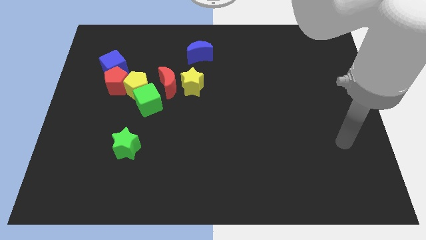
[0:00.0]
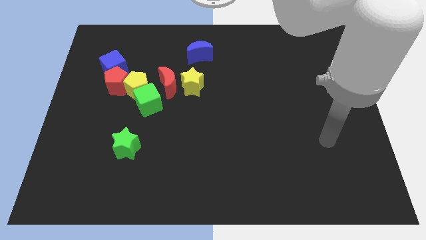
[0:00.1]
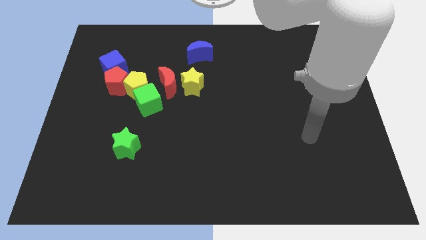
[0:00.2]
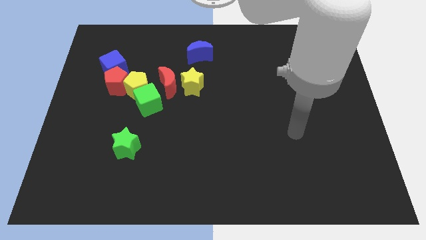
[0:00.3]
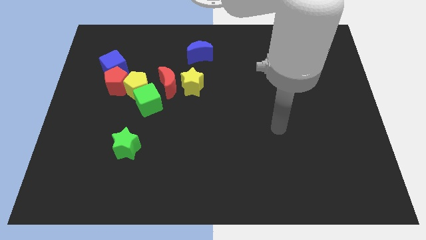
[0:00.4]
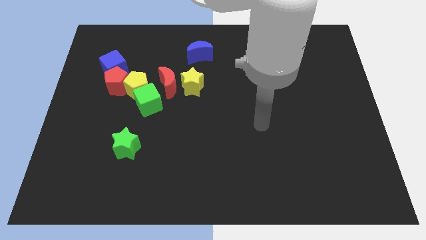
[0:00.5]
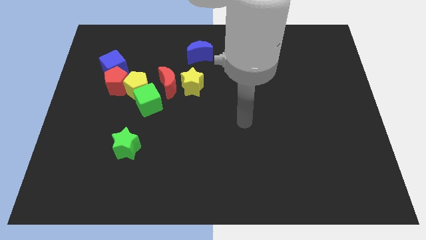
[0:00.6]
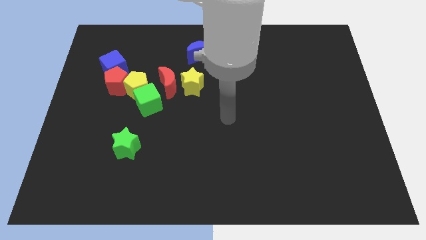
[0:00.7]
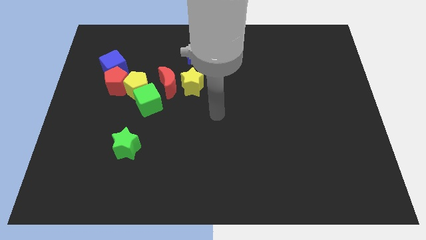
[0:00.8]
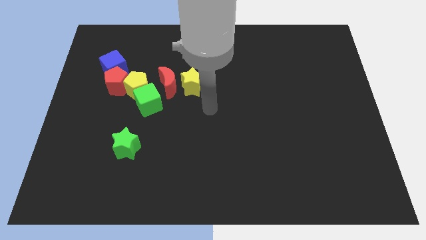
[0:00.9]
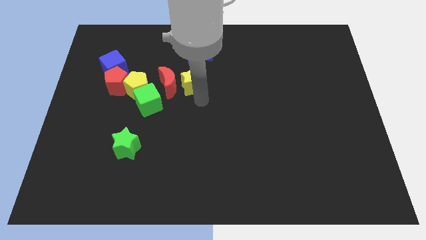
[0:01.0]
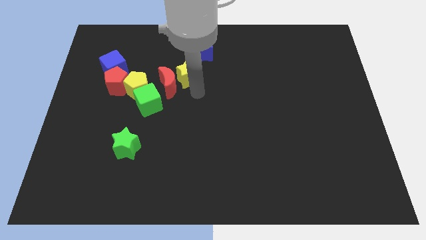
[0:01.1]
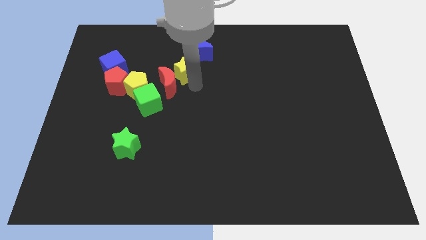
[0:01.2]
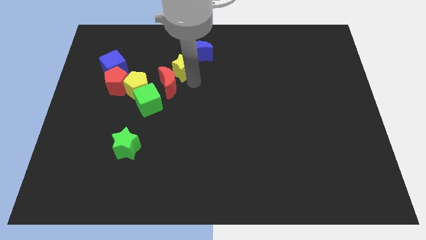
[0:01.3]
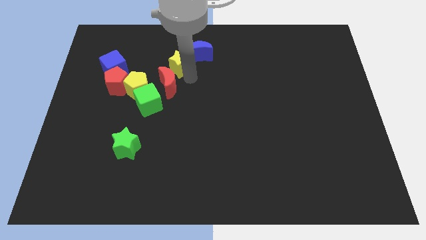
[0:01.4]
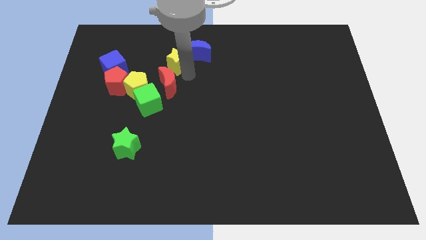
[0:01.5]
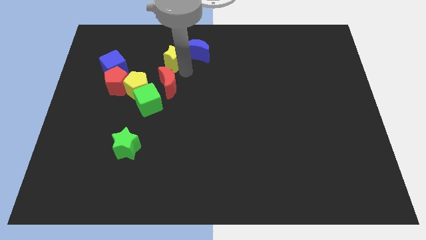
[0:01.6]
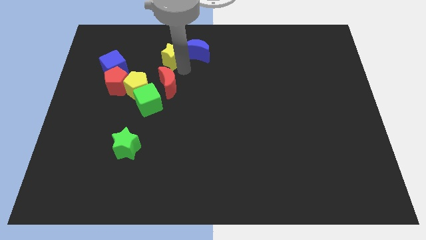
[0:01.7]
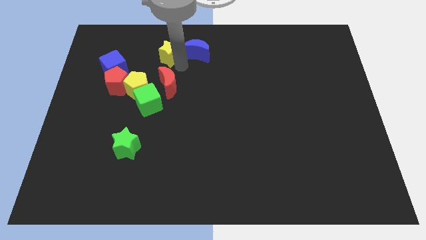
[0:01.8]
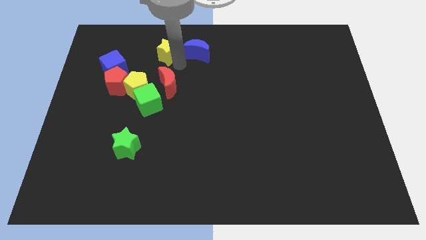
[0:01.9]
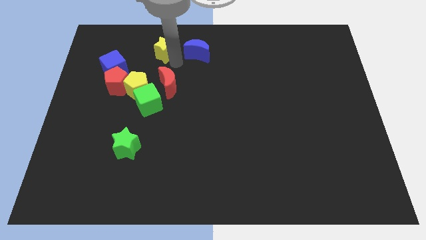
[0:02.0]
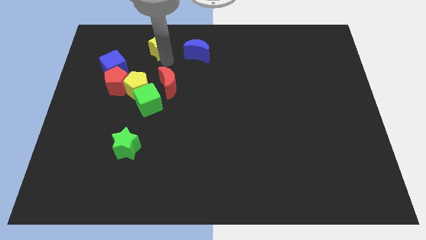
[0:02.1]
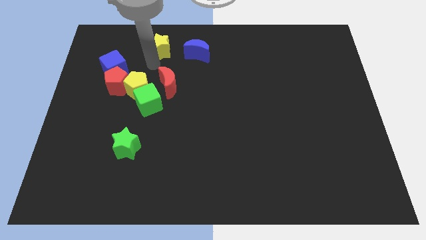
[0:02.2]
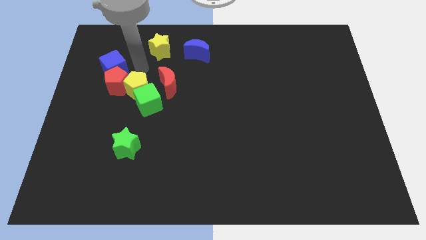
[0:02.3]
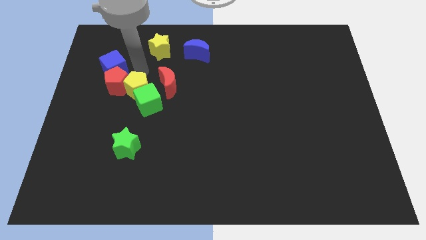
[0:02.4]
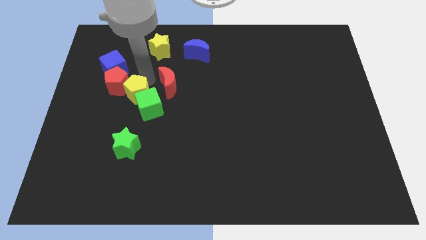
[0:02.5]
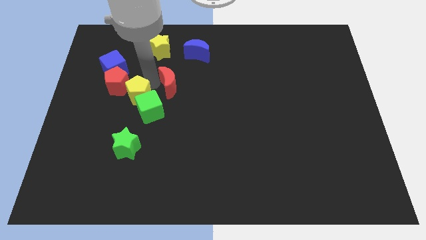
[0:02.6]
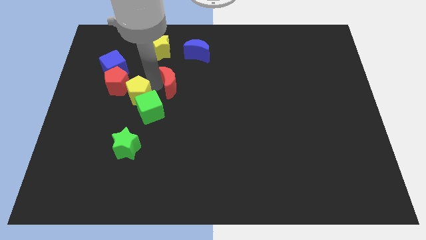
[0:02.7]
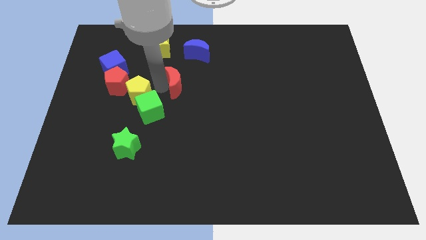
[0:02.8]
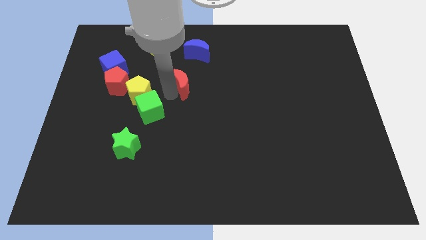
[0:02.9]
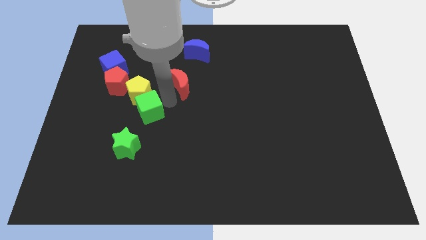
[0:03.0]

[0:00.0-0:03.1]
place the yellow star diagonally top left to the red crescent

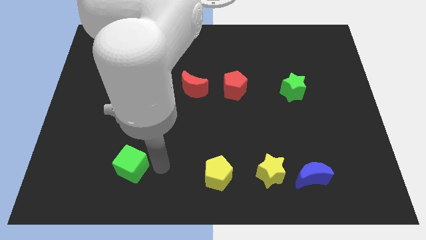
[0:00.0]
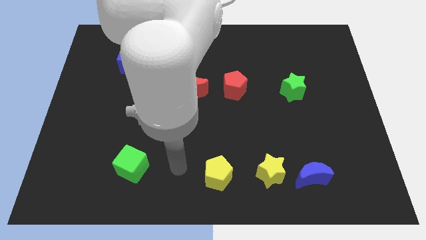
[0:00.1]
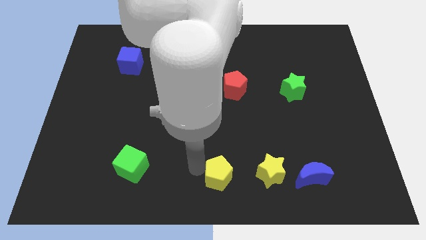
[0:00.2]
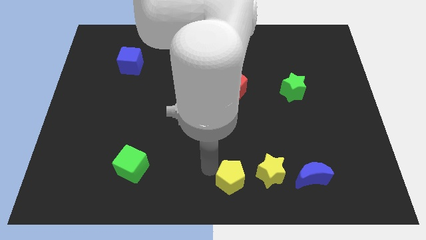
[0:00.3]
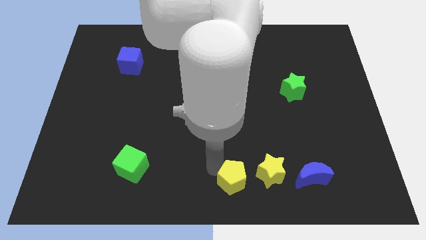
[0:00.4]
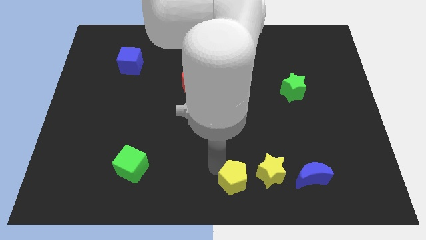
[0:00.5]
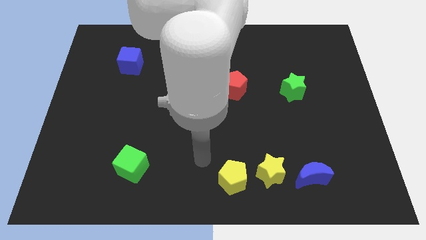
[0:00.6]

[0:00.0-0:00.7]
push the yellow pentagon closer to the yellow star

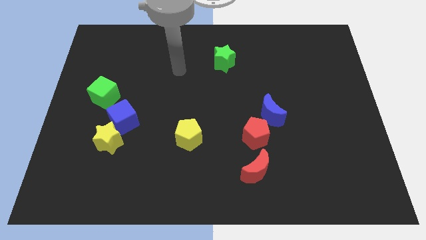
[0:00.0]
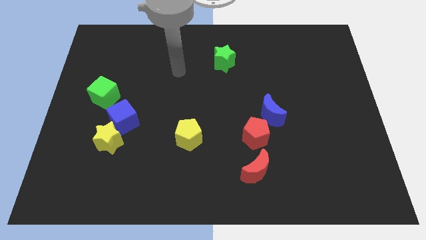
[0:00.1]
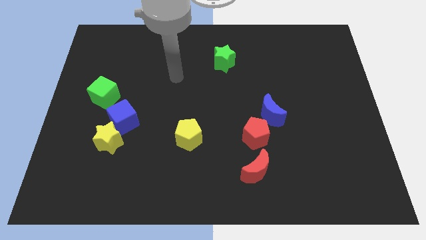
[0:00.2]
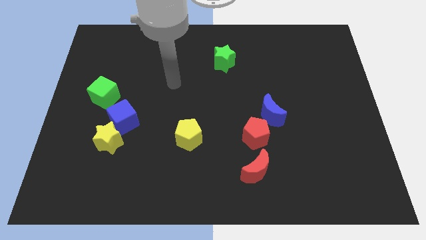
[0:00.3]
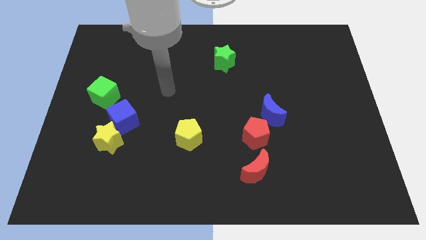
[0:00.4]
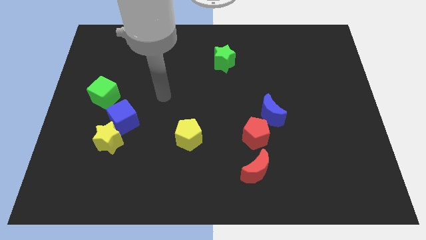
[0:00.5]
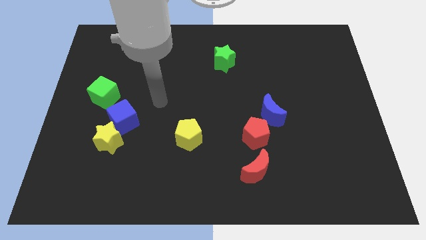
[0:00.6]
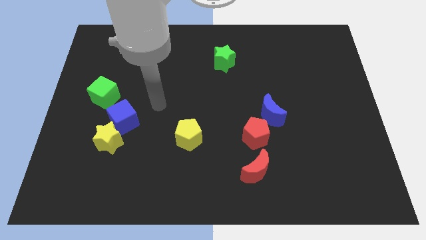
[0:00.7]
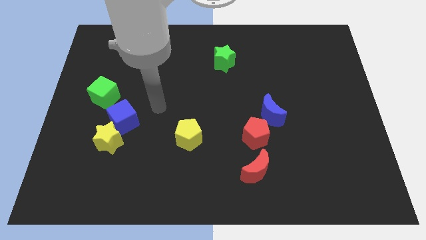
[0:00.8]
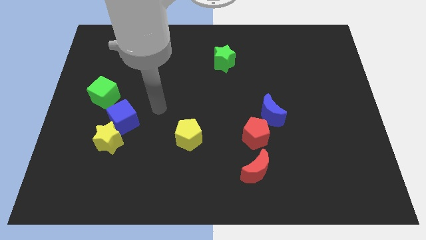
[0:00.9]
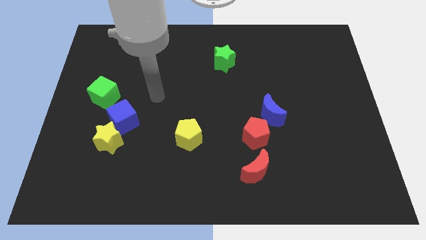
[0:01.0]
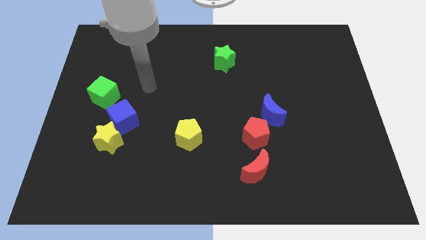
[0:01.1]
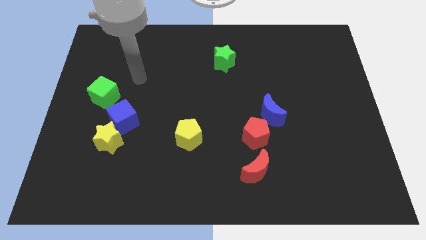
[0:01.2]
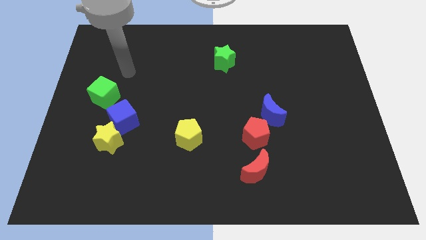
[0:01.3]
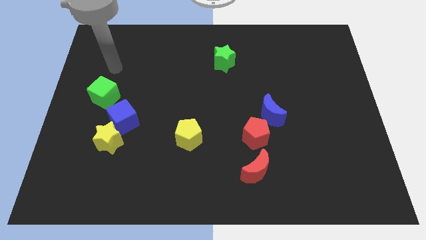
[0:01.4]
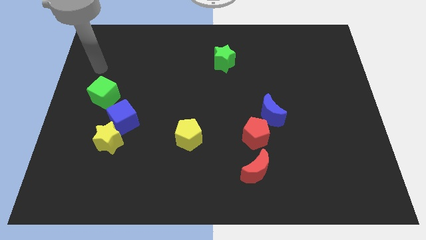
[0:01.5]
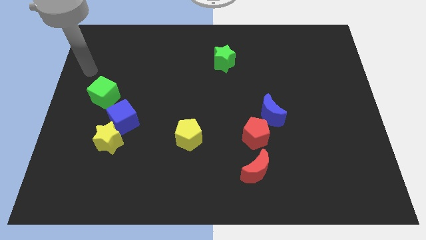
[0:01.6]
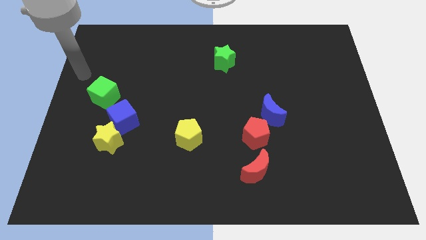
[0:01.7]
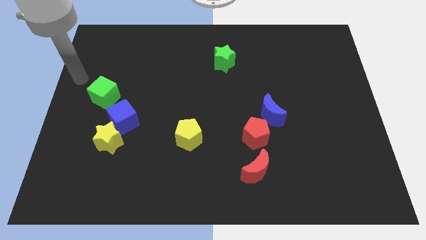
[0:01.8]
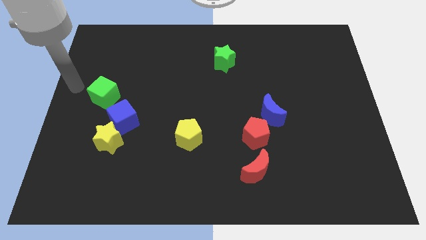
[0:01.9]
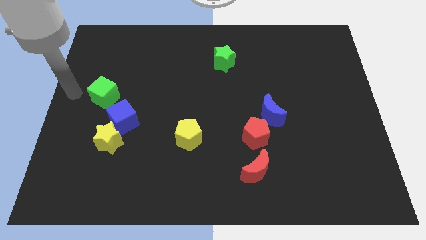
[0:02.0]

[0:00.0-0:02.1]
go to the left side of the green cube

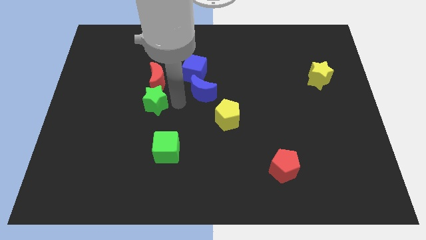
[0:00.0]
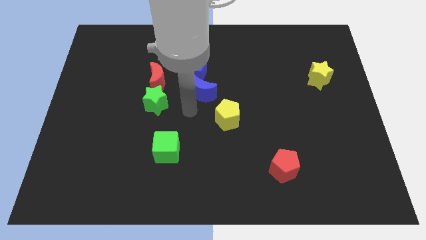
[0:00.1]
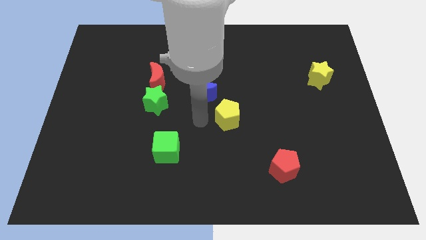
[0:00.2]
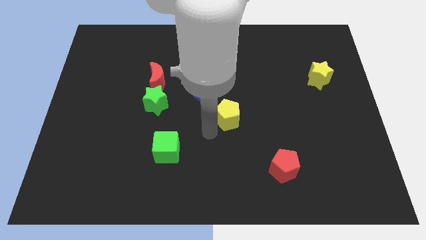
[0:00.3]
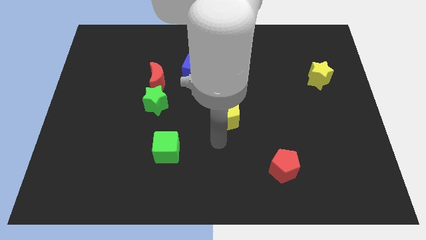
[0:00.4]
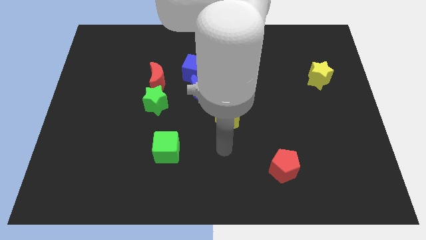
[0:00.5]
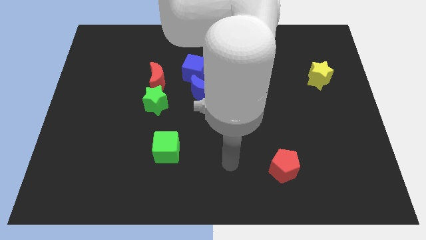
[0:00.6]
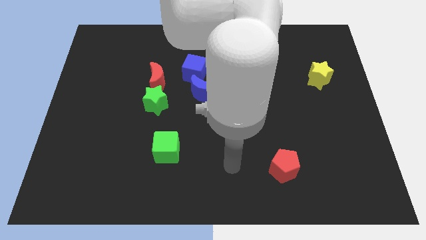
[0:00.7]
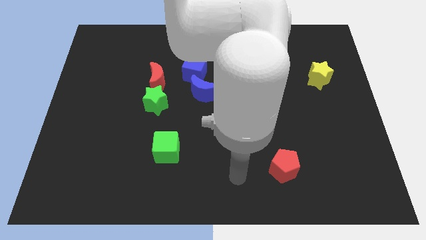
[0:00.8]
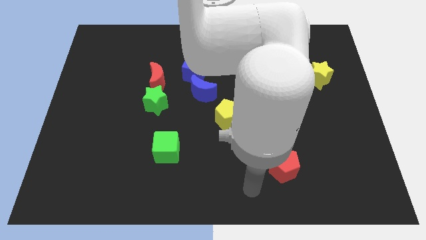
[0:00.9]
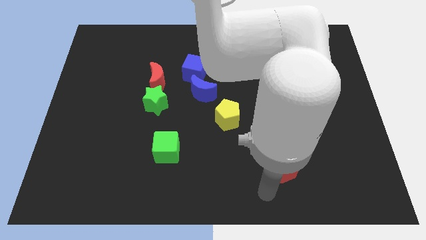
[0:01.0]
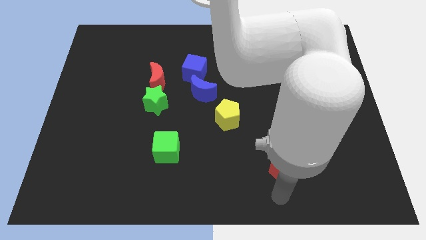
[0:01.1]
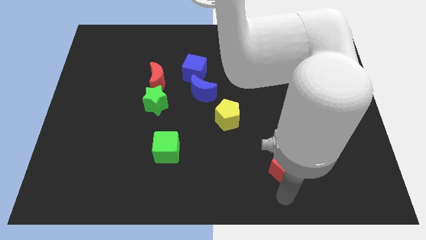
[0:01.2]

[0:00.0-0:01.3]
move the arm away from the green star

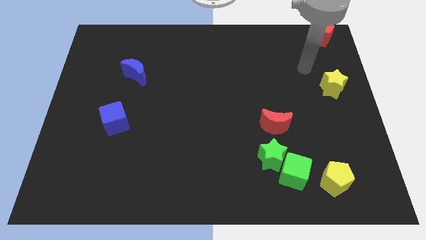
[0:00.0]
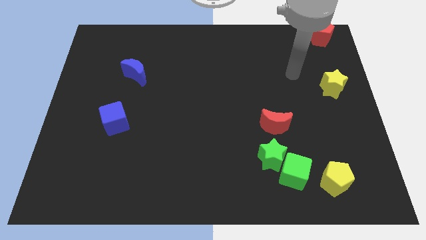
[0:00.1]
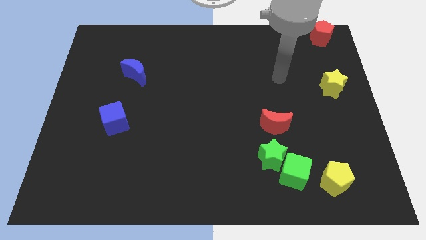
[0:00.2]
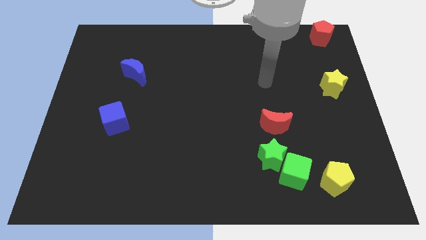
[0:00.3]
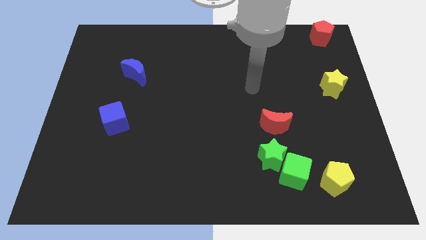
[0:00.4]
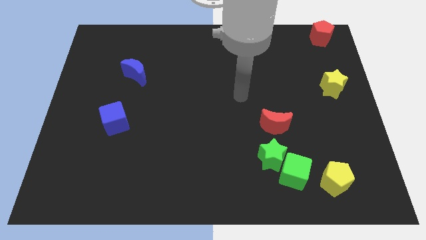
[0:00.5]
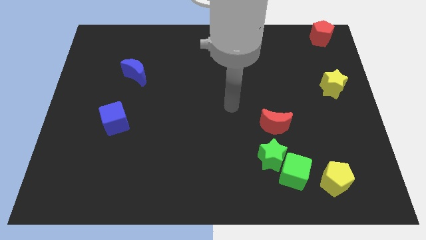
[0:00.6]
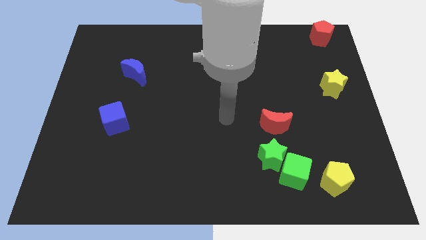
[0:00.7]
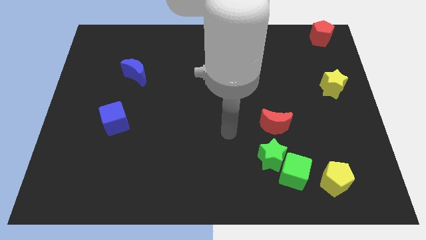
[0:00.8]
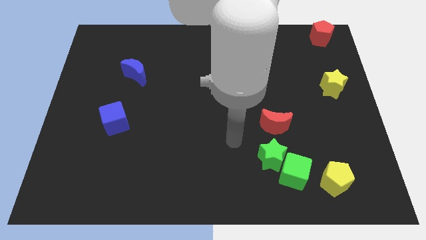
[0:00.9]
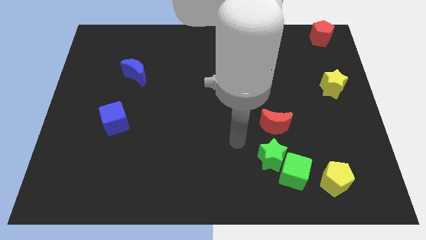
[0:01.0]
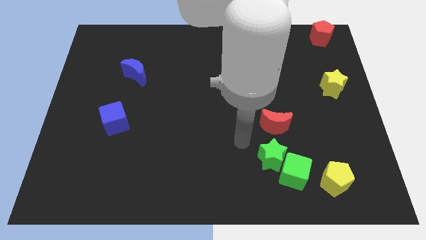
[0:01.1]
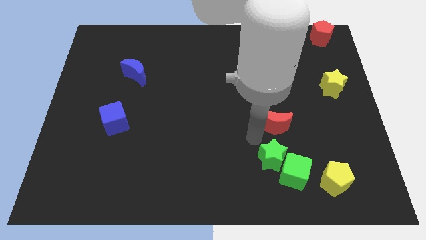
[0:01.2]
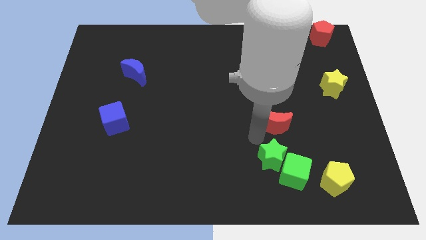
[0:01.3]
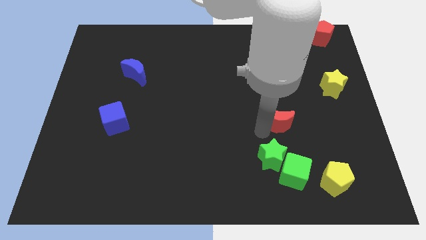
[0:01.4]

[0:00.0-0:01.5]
move your arm to the bottom of the red moon

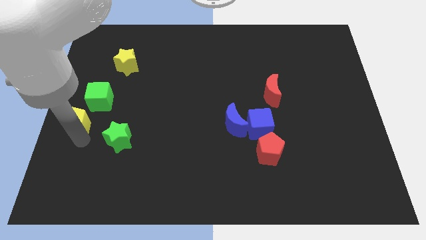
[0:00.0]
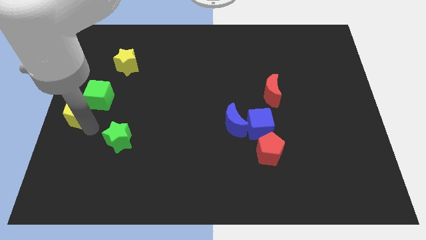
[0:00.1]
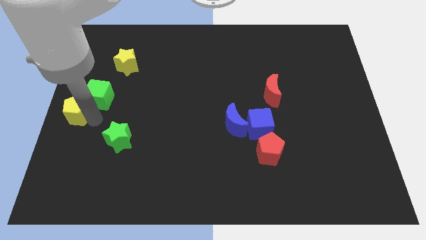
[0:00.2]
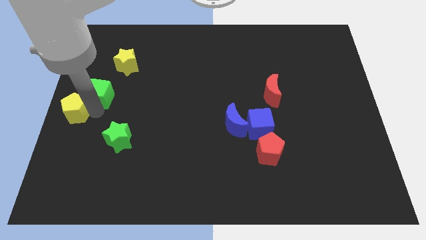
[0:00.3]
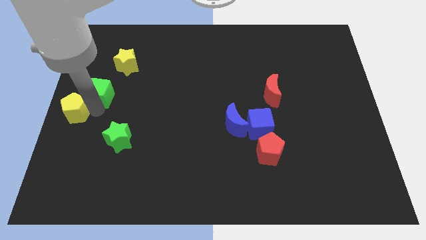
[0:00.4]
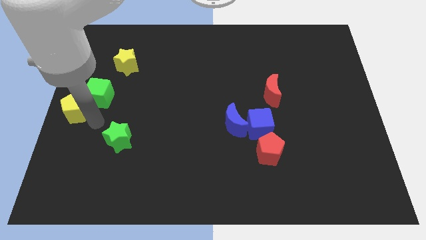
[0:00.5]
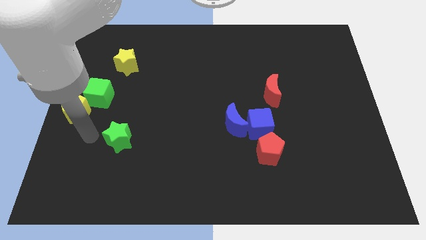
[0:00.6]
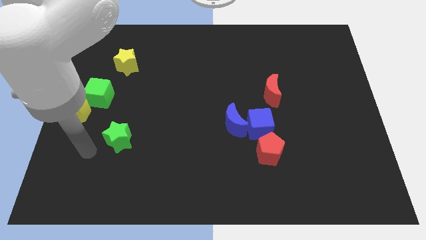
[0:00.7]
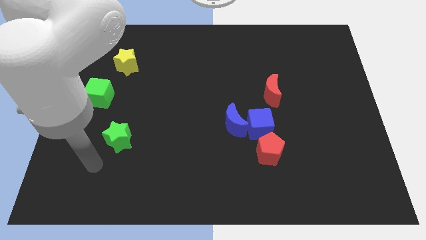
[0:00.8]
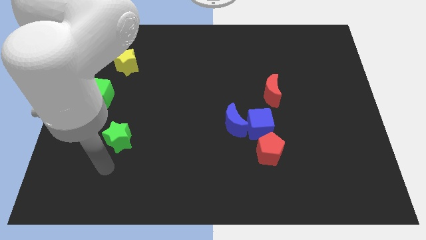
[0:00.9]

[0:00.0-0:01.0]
push the yellow pentagon into the green cube
